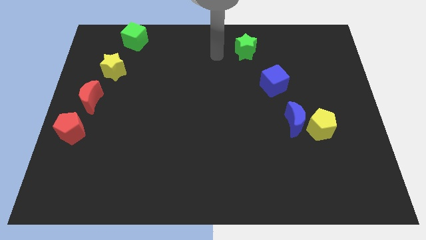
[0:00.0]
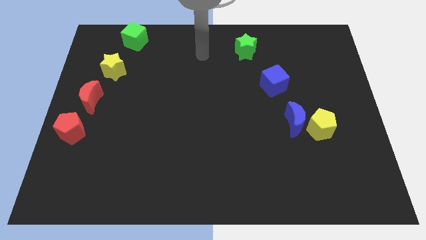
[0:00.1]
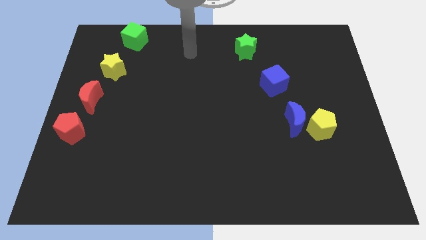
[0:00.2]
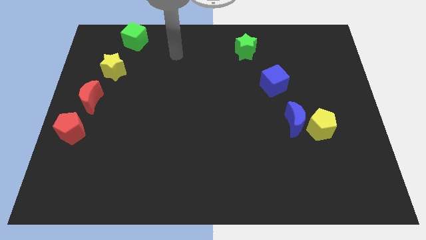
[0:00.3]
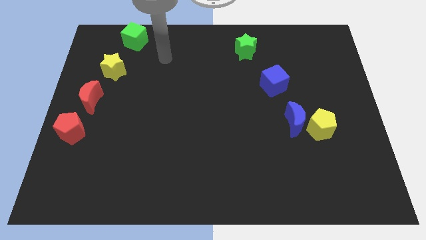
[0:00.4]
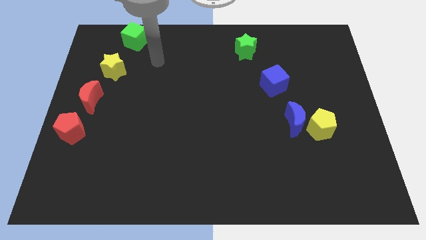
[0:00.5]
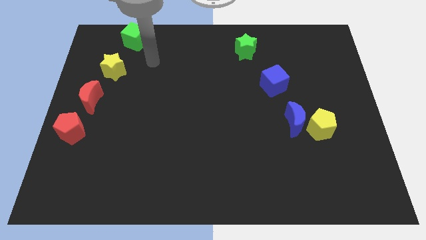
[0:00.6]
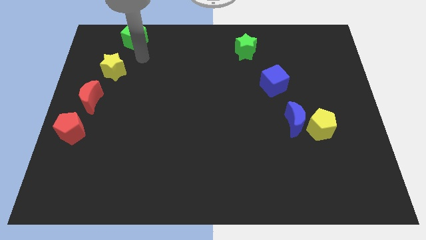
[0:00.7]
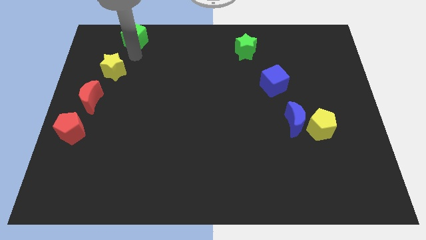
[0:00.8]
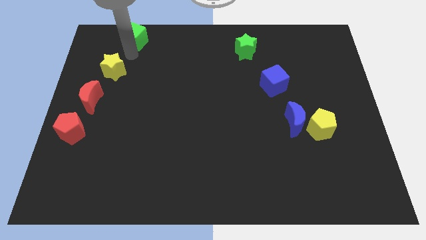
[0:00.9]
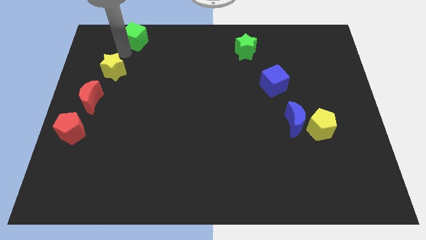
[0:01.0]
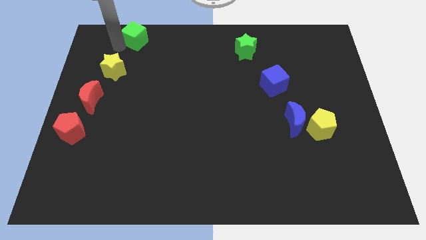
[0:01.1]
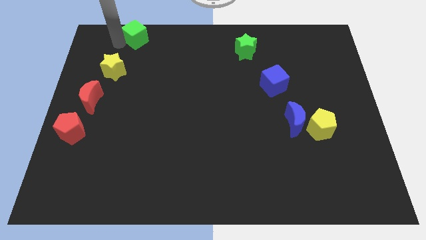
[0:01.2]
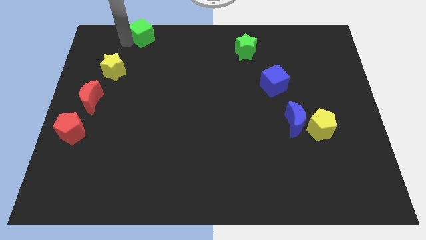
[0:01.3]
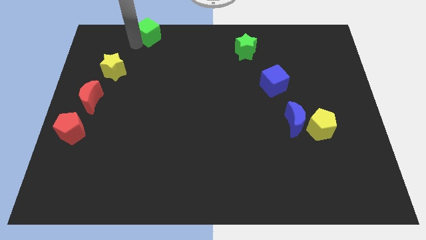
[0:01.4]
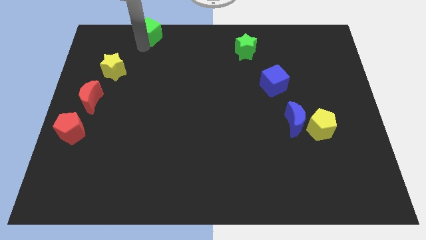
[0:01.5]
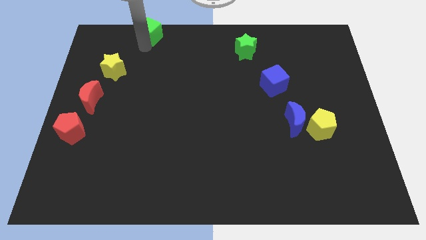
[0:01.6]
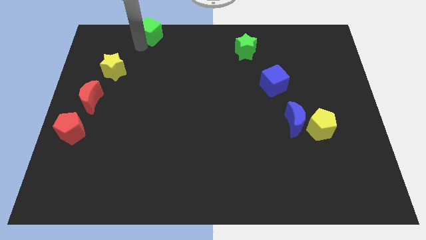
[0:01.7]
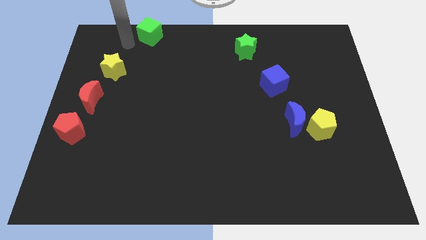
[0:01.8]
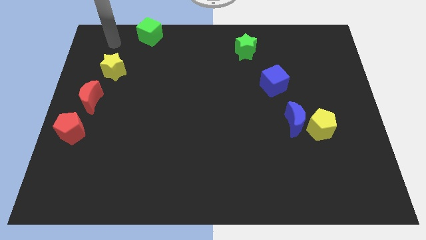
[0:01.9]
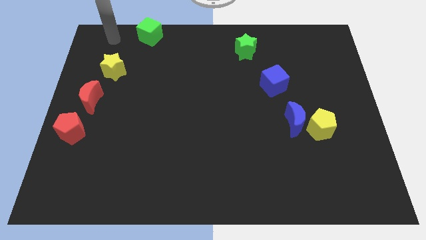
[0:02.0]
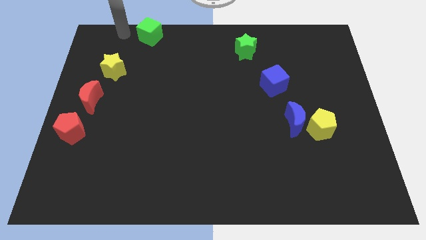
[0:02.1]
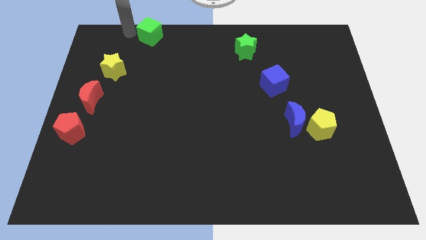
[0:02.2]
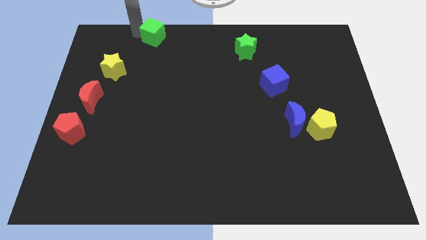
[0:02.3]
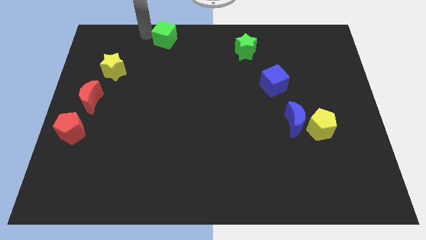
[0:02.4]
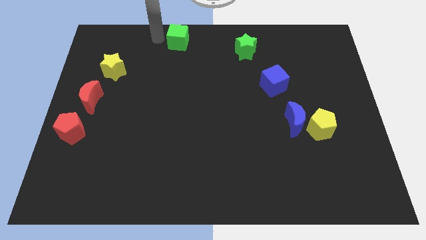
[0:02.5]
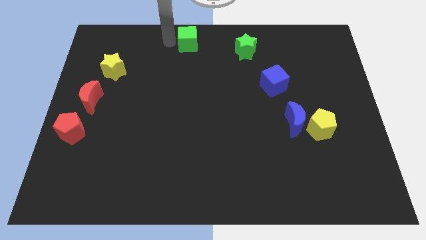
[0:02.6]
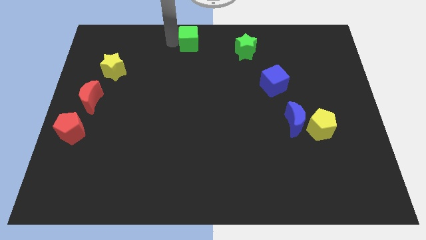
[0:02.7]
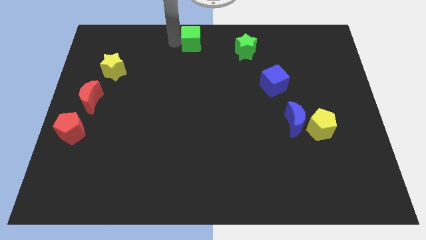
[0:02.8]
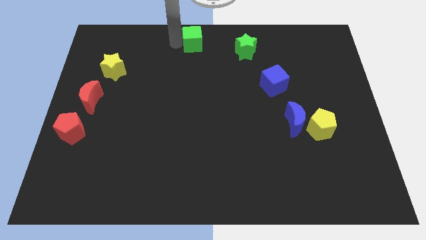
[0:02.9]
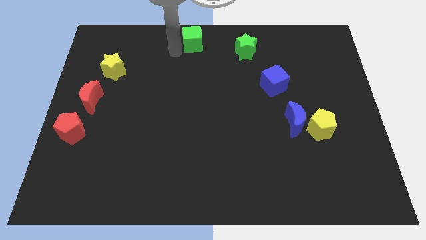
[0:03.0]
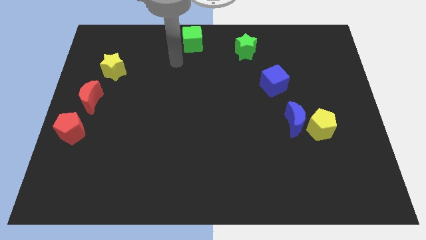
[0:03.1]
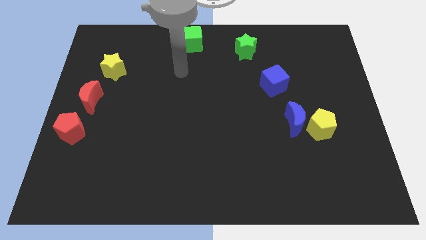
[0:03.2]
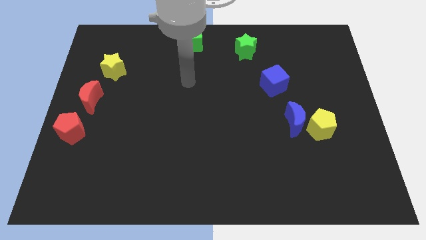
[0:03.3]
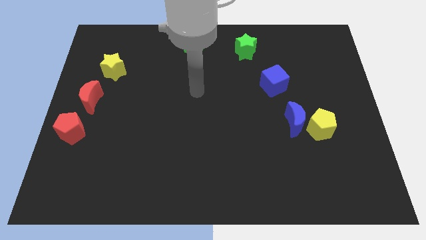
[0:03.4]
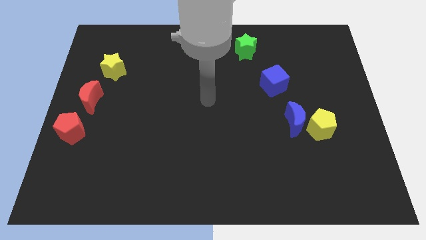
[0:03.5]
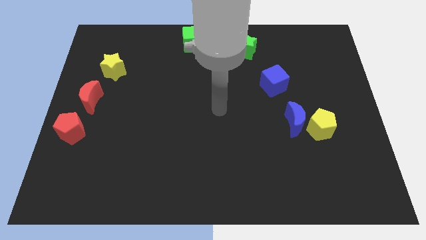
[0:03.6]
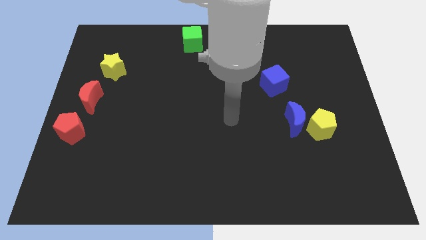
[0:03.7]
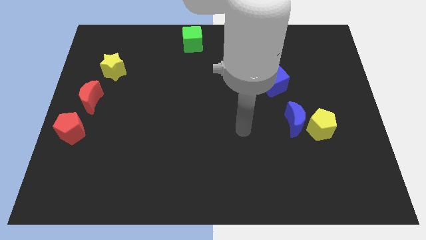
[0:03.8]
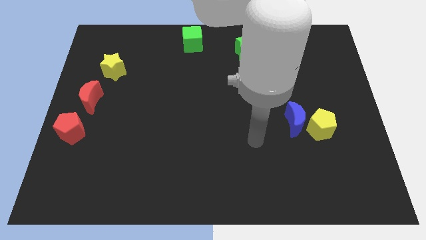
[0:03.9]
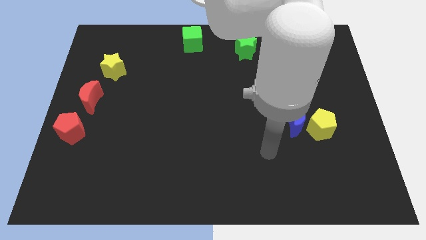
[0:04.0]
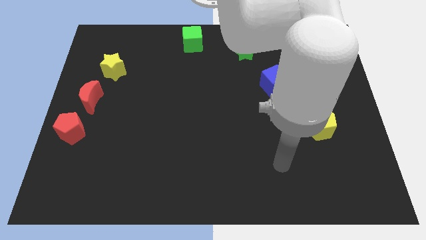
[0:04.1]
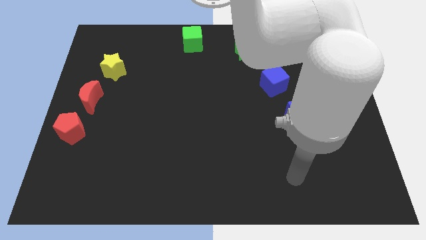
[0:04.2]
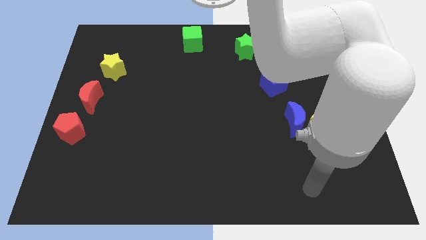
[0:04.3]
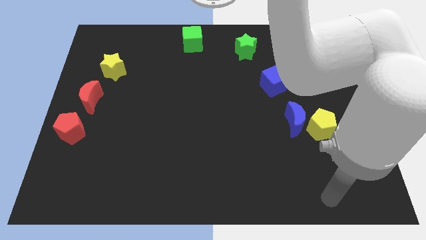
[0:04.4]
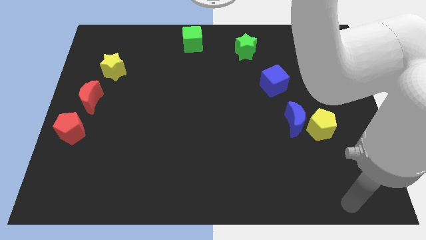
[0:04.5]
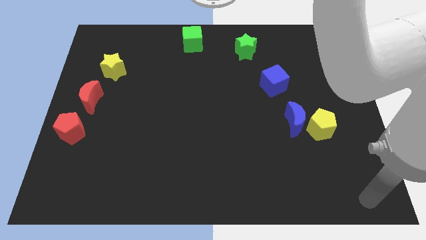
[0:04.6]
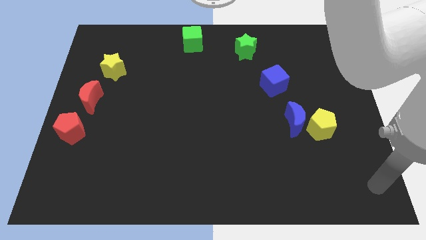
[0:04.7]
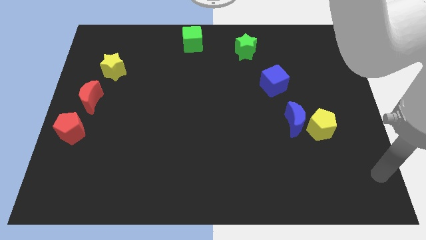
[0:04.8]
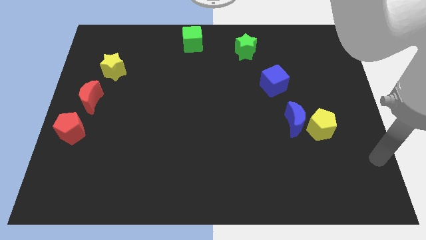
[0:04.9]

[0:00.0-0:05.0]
place the green cube at the top center of the board

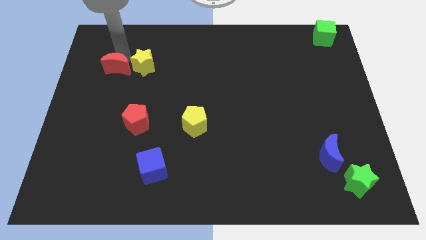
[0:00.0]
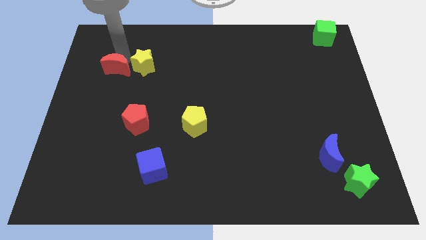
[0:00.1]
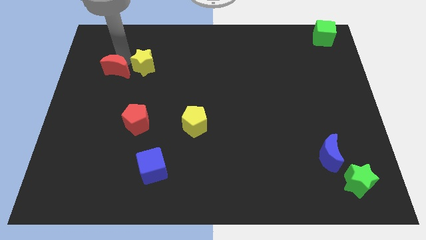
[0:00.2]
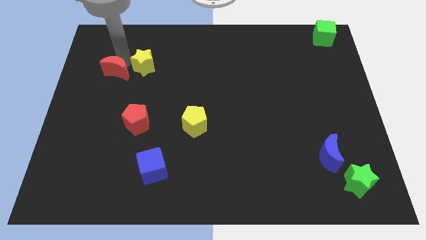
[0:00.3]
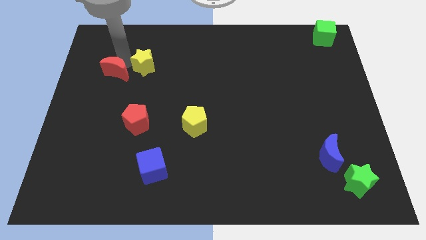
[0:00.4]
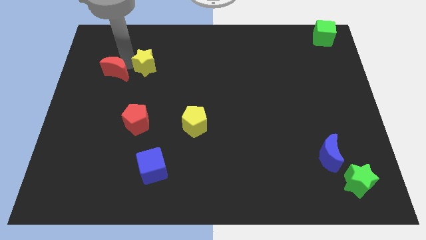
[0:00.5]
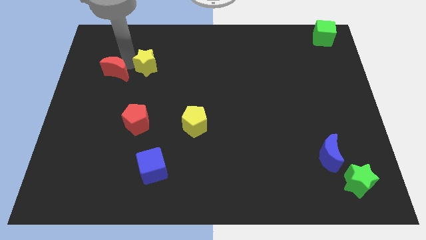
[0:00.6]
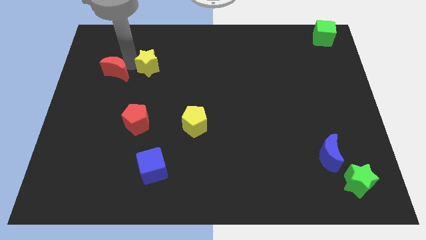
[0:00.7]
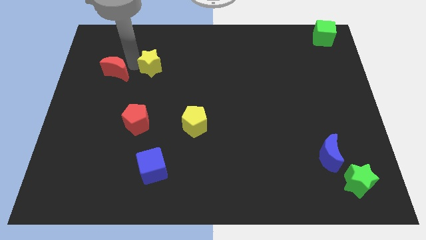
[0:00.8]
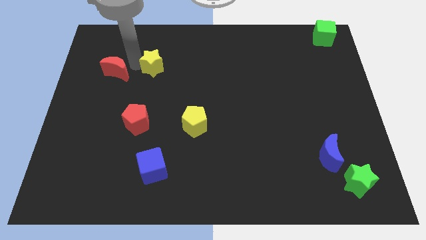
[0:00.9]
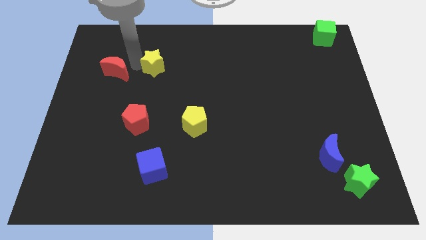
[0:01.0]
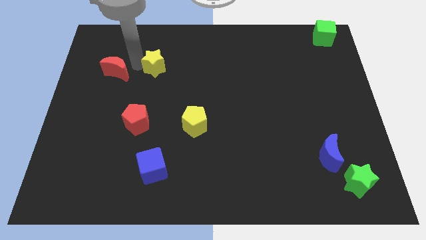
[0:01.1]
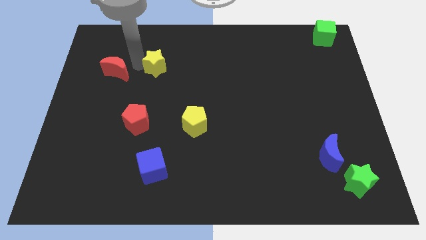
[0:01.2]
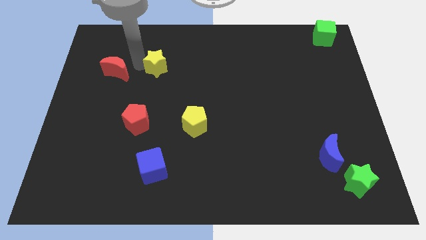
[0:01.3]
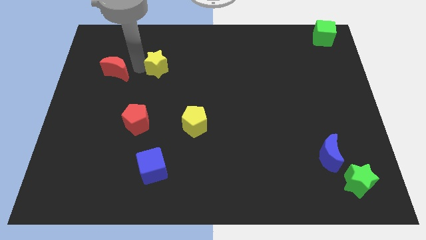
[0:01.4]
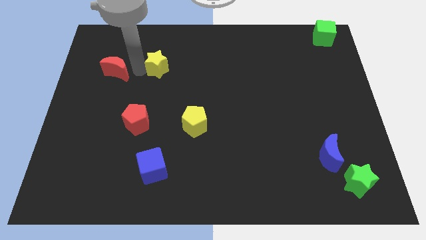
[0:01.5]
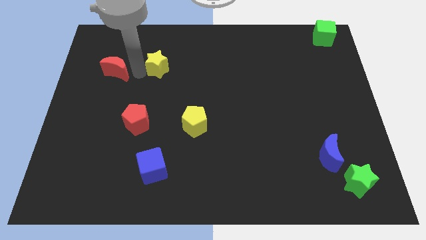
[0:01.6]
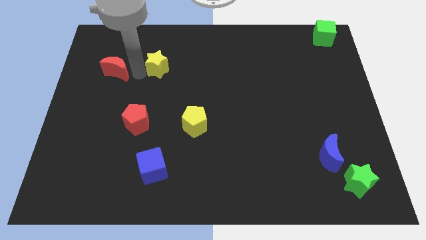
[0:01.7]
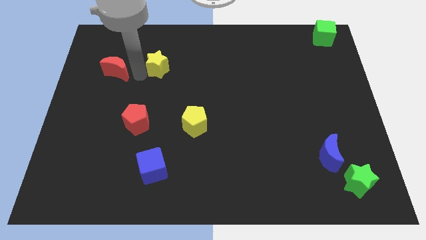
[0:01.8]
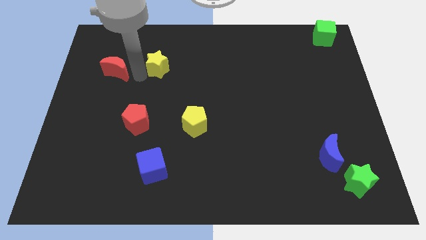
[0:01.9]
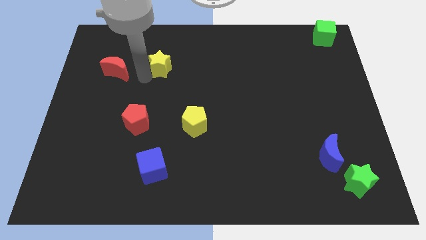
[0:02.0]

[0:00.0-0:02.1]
separate the yellow star and the red crescent

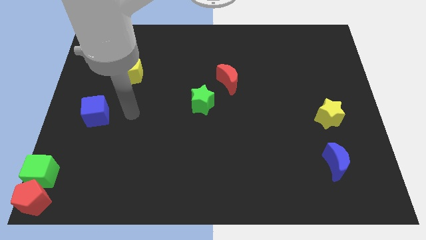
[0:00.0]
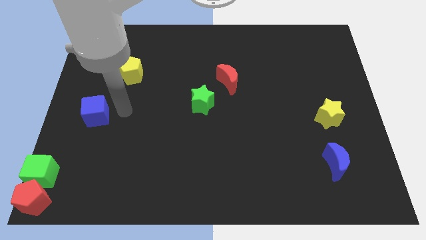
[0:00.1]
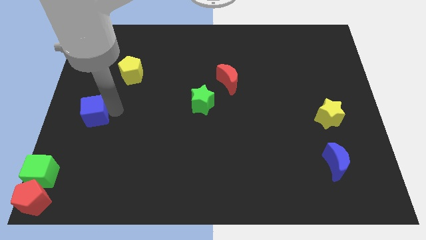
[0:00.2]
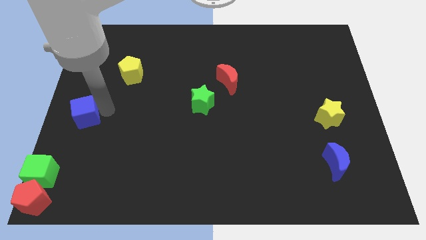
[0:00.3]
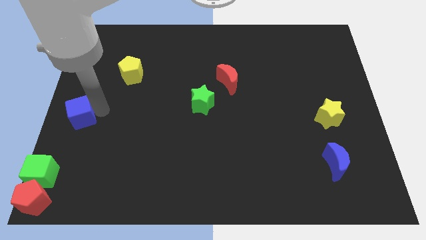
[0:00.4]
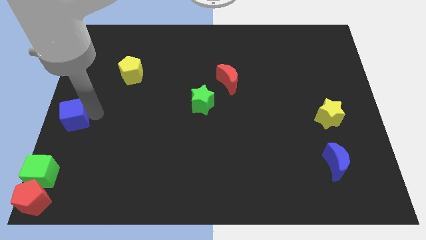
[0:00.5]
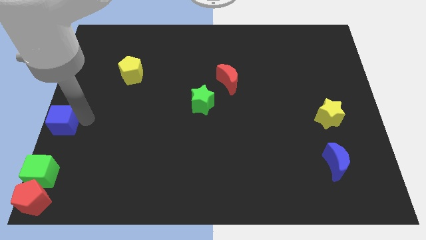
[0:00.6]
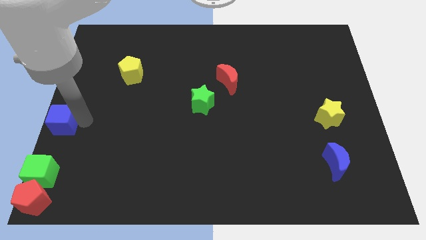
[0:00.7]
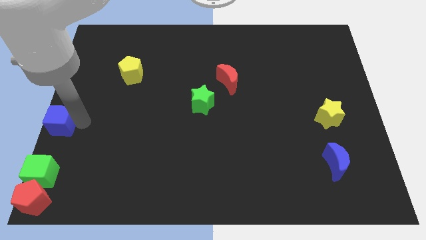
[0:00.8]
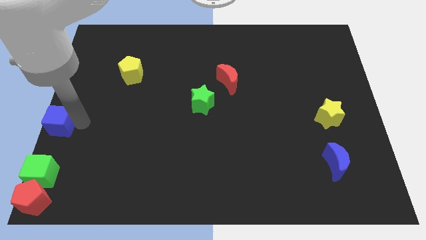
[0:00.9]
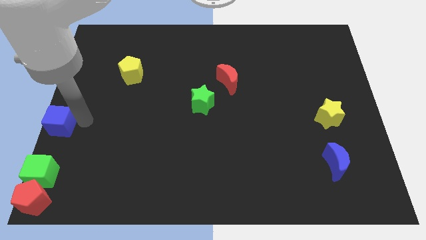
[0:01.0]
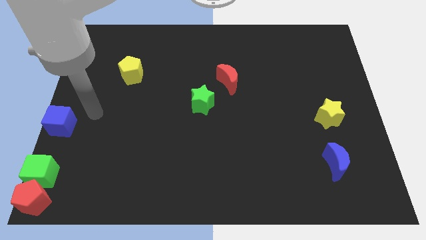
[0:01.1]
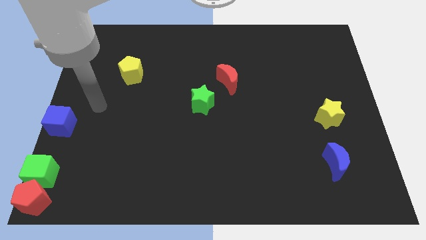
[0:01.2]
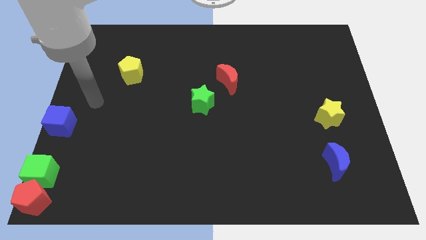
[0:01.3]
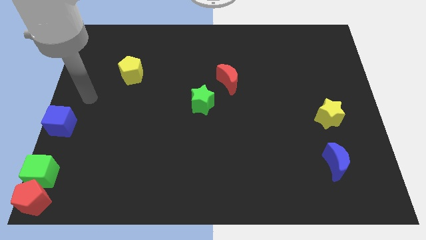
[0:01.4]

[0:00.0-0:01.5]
move the blue cube to the center left of the board

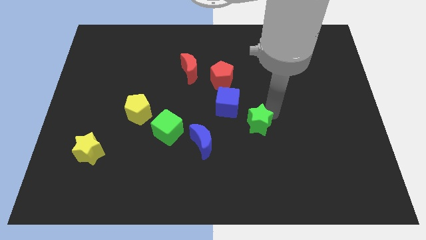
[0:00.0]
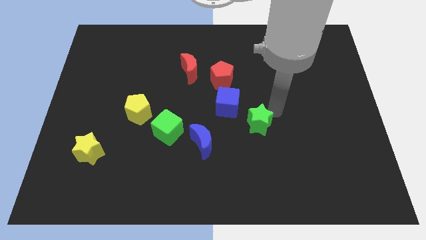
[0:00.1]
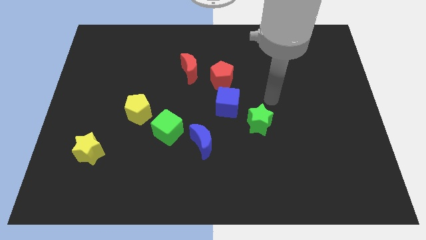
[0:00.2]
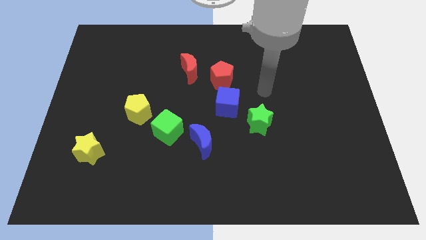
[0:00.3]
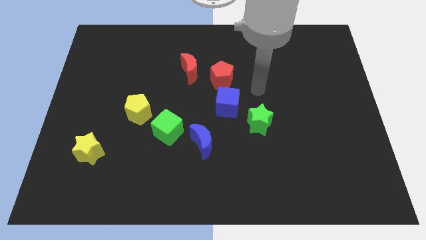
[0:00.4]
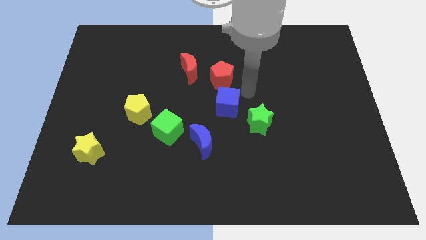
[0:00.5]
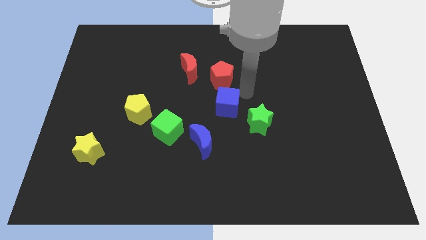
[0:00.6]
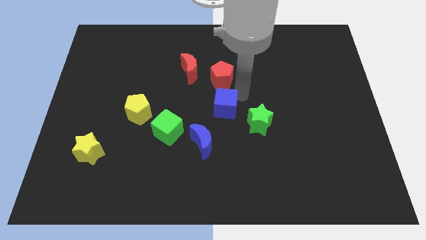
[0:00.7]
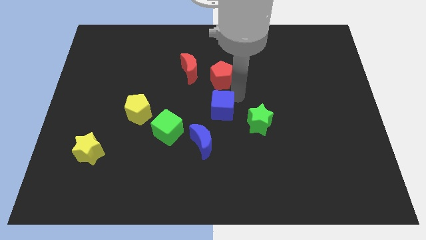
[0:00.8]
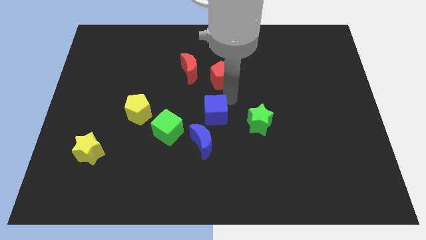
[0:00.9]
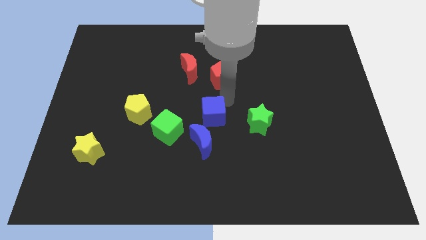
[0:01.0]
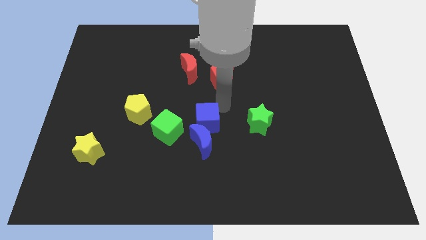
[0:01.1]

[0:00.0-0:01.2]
slide blue cube at the center
